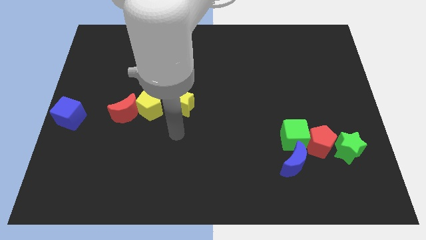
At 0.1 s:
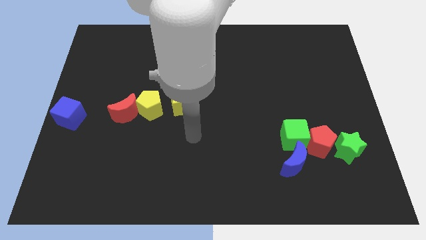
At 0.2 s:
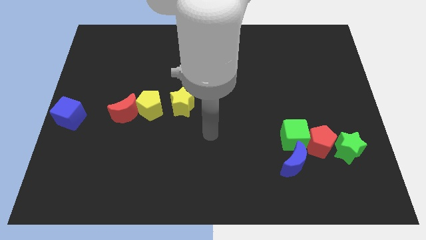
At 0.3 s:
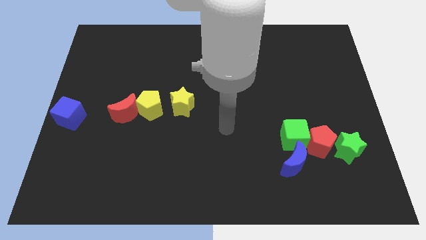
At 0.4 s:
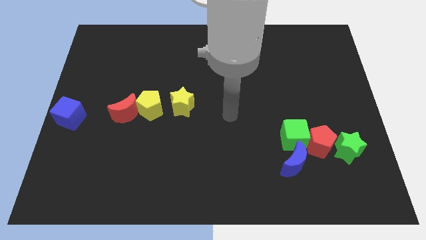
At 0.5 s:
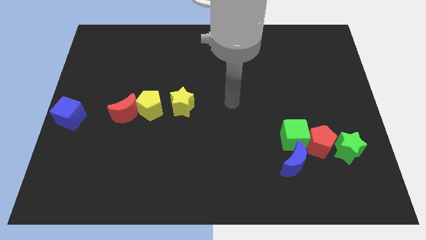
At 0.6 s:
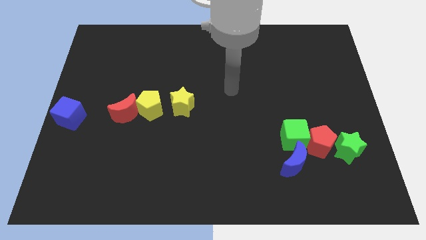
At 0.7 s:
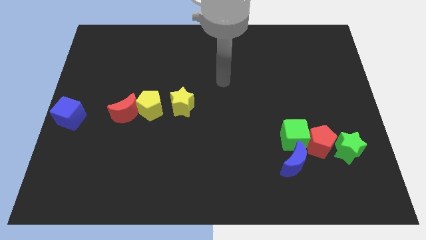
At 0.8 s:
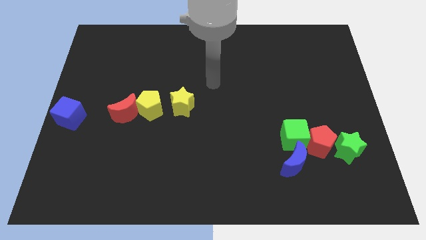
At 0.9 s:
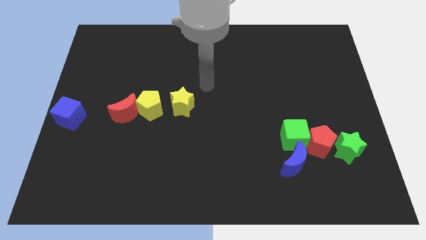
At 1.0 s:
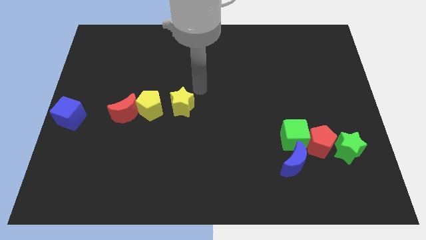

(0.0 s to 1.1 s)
point your arm at the top right side of the yellow star

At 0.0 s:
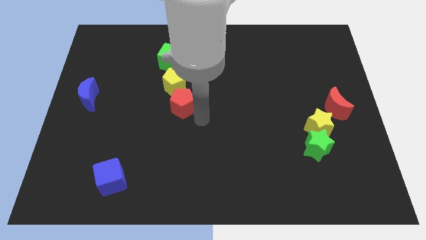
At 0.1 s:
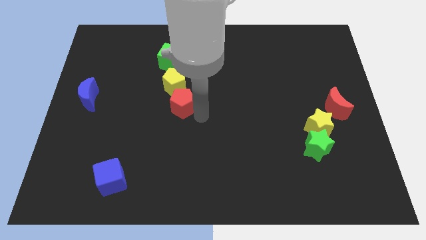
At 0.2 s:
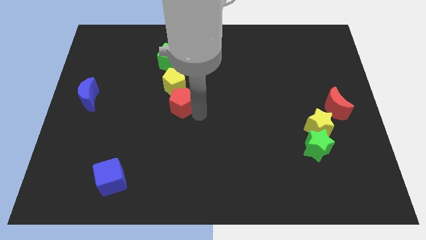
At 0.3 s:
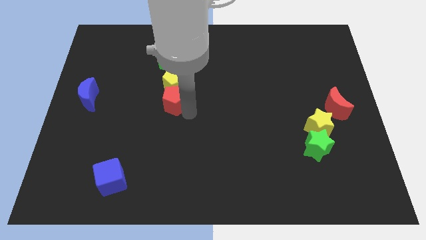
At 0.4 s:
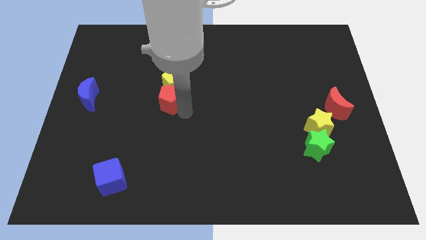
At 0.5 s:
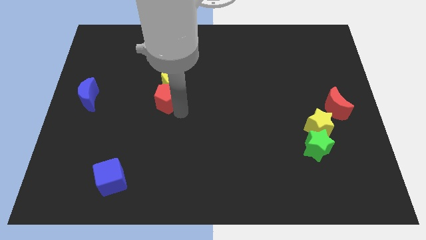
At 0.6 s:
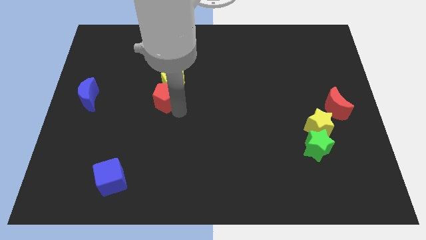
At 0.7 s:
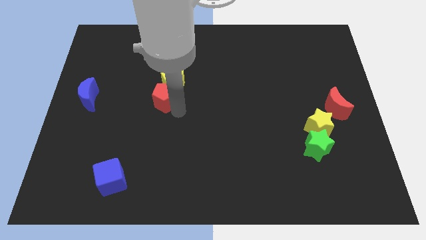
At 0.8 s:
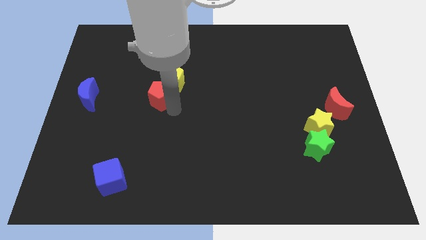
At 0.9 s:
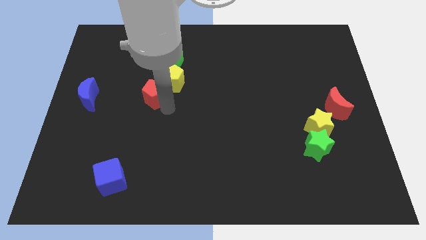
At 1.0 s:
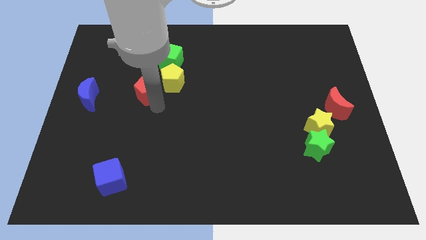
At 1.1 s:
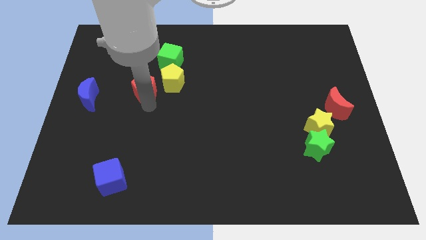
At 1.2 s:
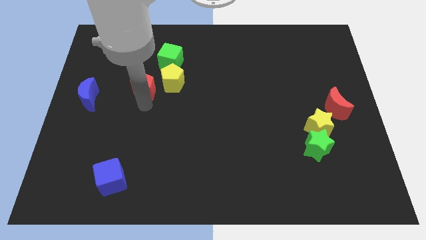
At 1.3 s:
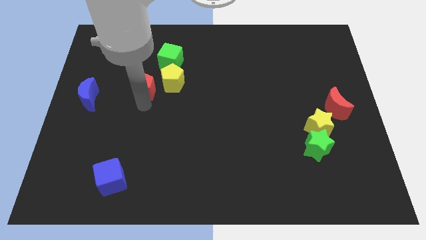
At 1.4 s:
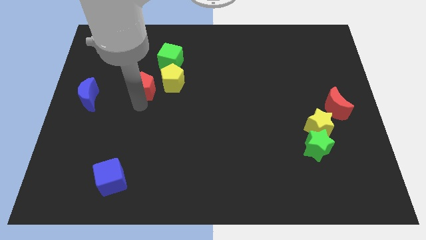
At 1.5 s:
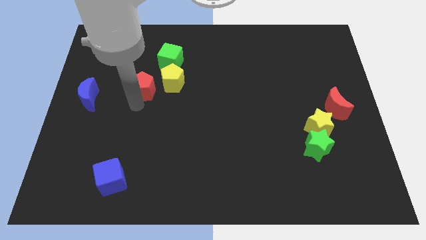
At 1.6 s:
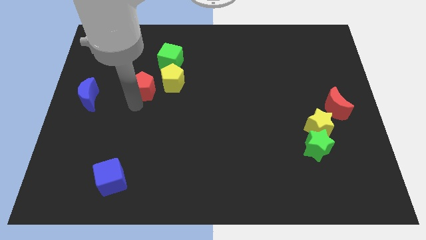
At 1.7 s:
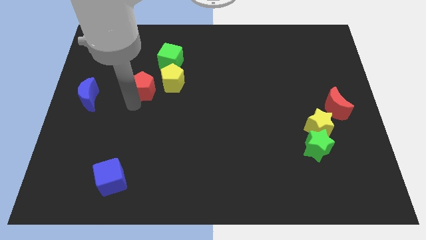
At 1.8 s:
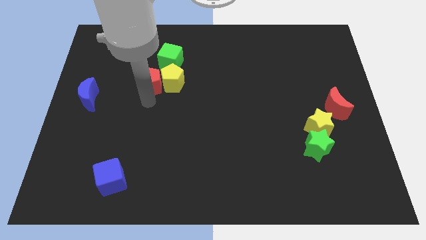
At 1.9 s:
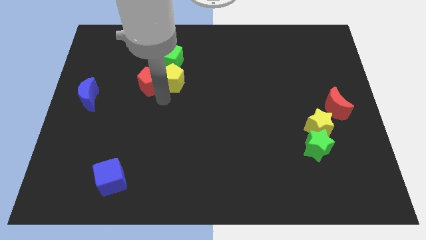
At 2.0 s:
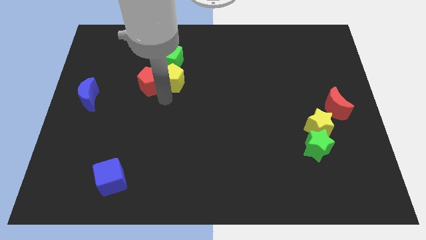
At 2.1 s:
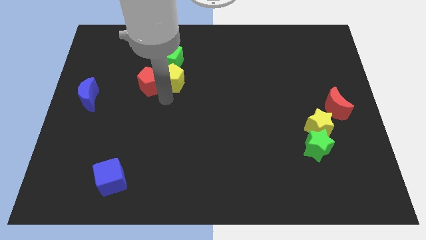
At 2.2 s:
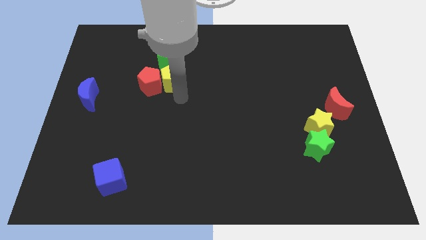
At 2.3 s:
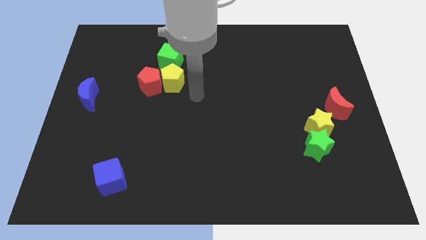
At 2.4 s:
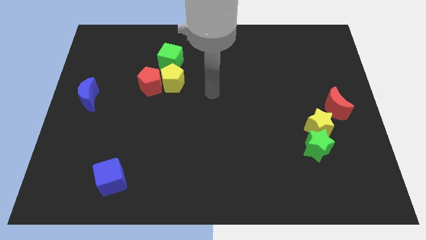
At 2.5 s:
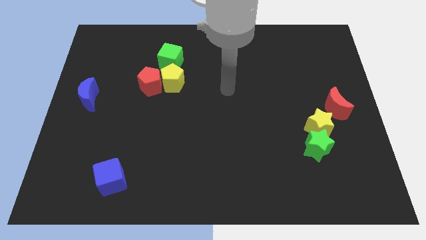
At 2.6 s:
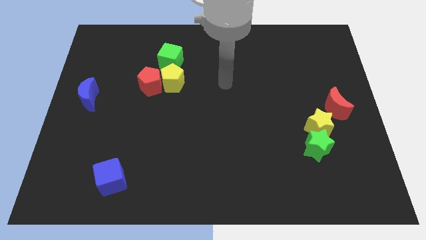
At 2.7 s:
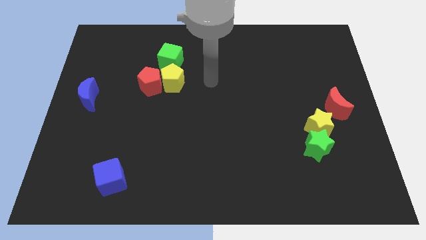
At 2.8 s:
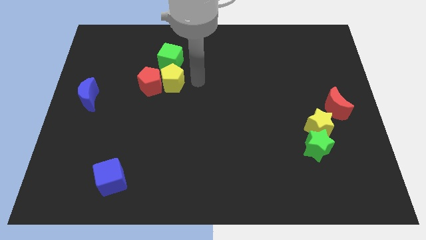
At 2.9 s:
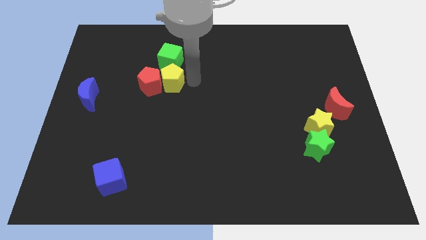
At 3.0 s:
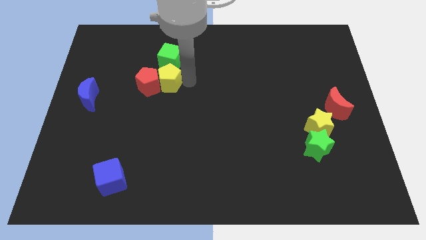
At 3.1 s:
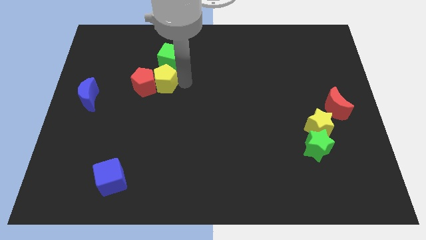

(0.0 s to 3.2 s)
place the red pentagon and yellow pentagon close to each other

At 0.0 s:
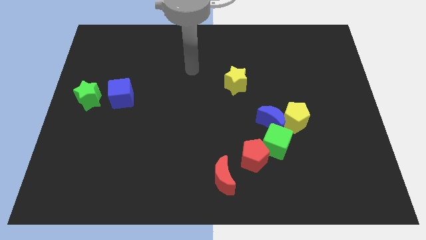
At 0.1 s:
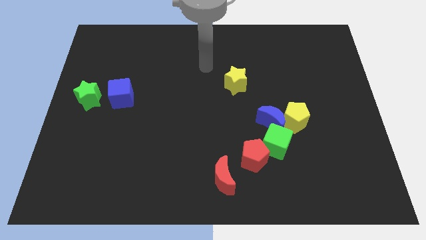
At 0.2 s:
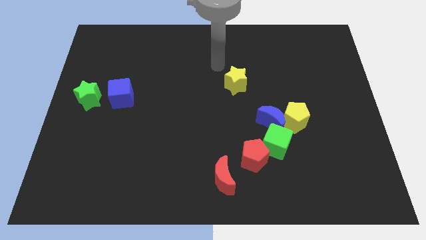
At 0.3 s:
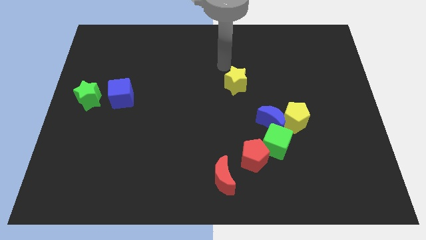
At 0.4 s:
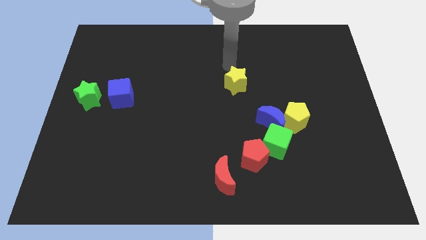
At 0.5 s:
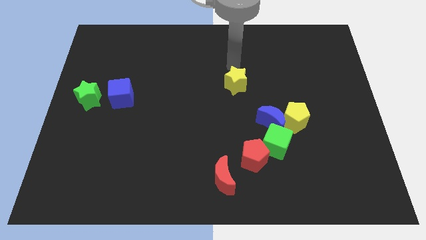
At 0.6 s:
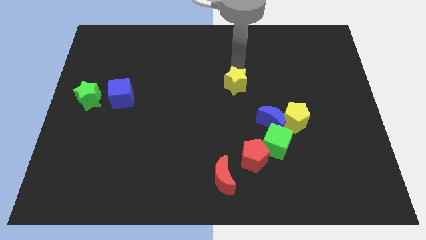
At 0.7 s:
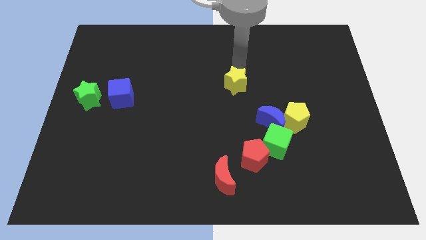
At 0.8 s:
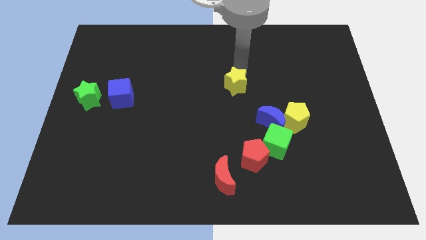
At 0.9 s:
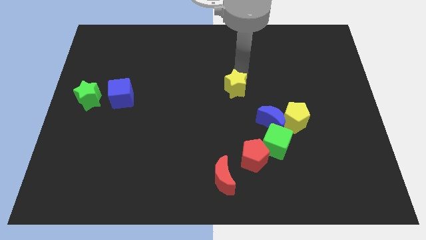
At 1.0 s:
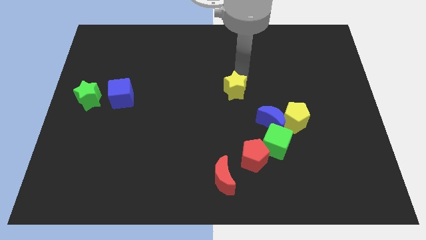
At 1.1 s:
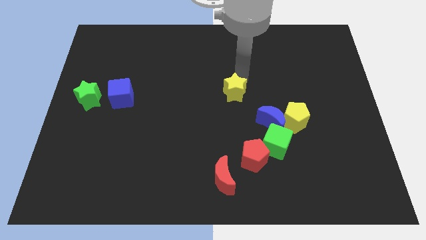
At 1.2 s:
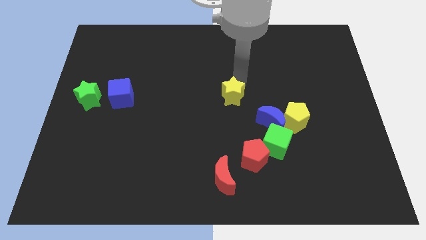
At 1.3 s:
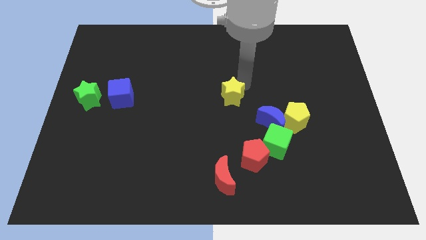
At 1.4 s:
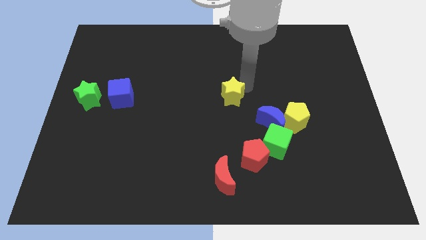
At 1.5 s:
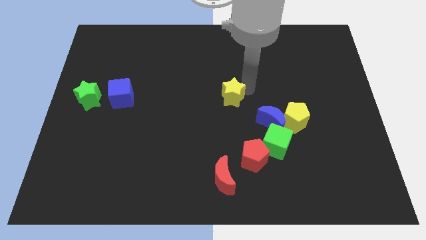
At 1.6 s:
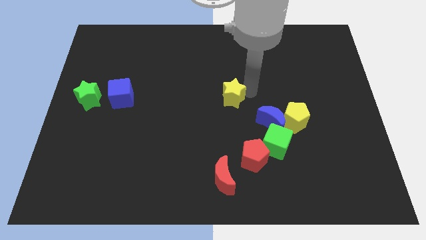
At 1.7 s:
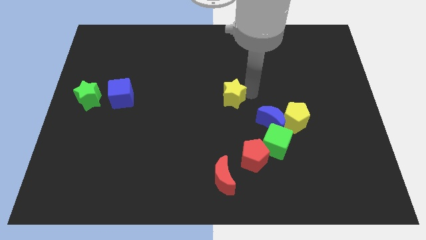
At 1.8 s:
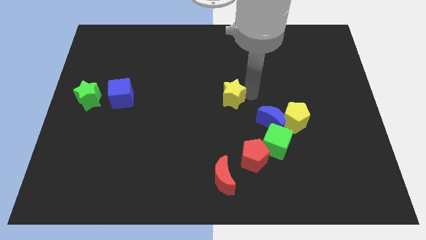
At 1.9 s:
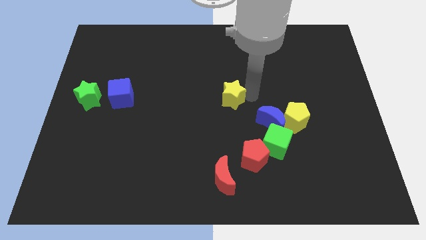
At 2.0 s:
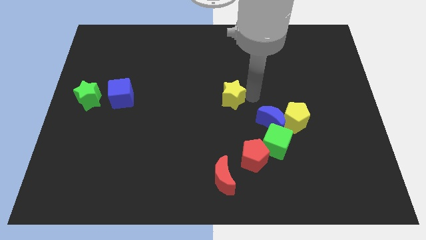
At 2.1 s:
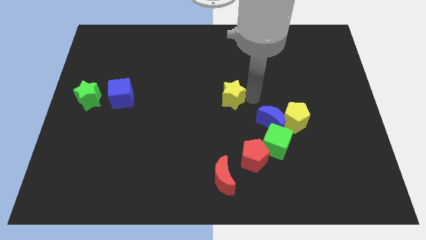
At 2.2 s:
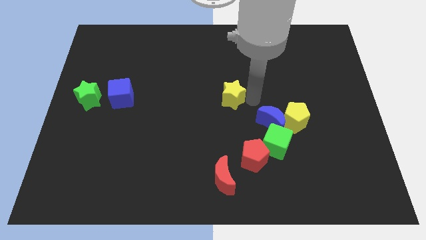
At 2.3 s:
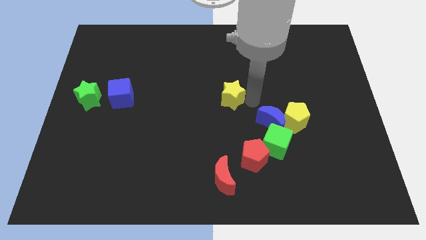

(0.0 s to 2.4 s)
push the yellow star slightly downwards

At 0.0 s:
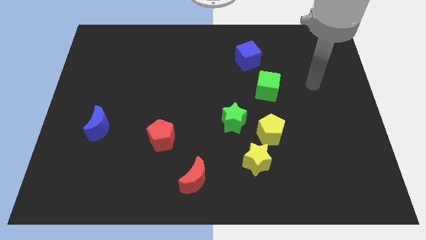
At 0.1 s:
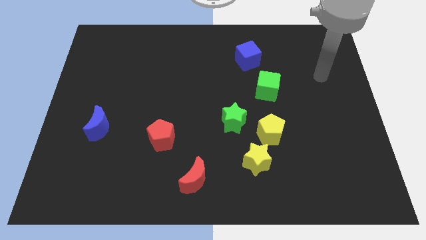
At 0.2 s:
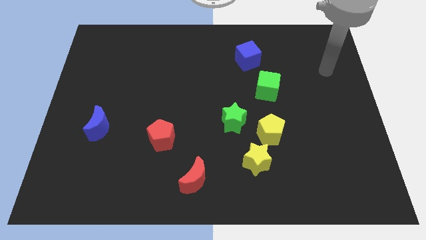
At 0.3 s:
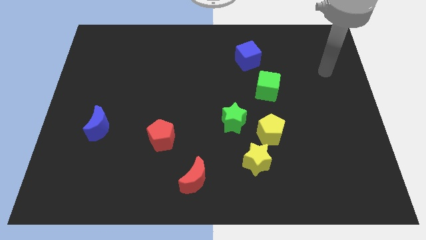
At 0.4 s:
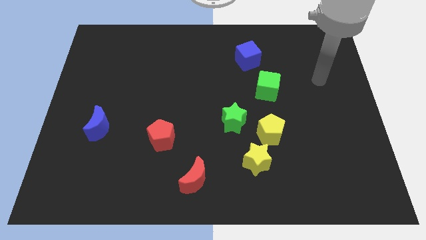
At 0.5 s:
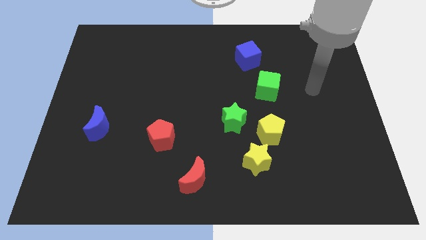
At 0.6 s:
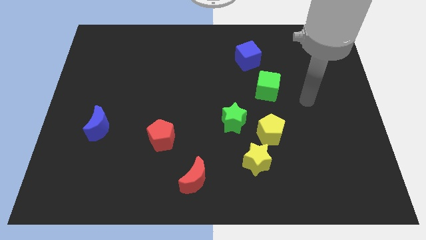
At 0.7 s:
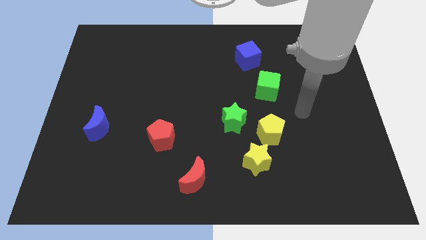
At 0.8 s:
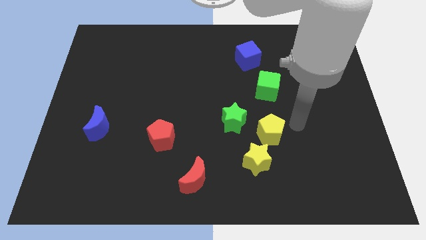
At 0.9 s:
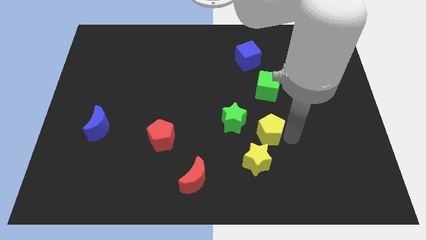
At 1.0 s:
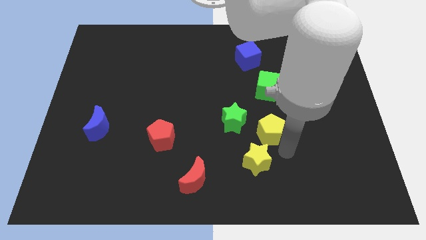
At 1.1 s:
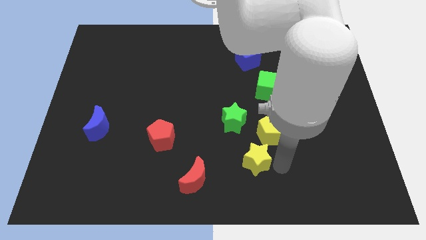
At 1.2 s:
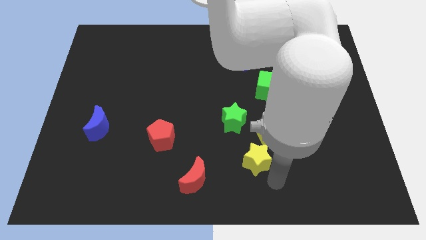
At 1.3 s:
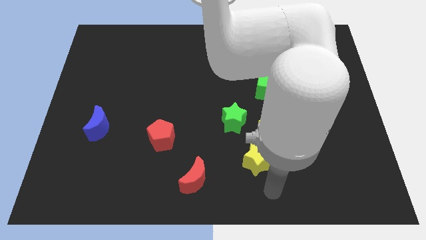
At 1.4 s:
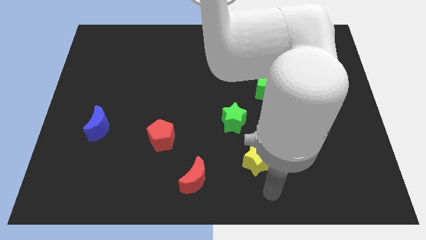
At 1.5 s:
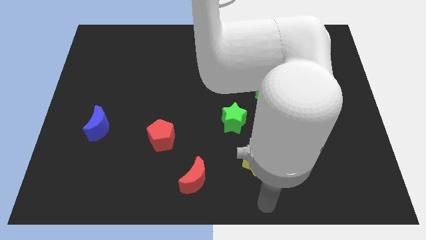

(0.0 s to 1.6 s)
move your arm below the yellow star

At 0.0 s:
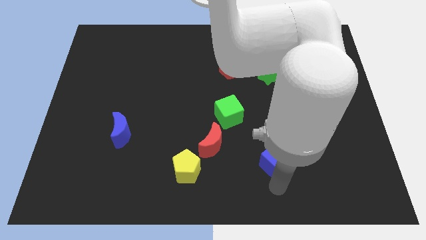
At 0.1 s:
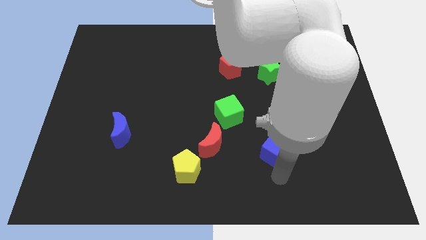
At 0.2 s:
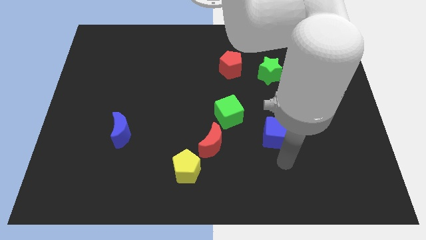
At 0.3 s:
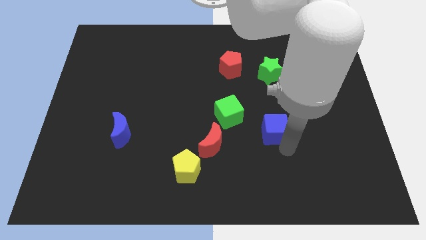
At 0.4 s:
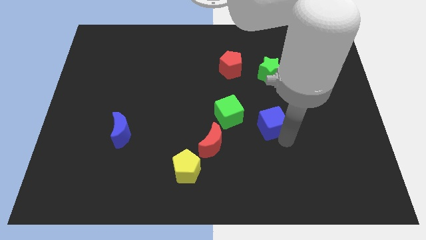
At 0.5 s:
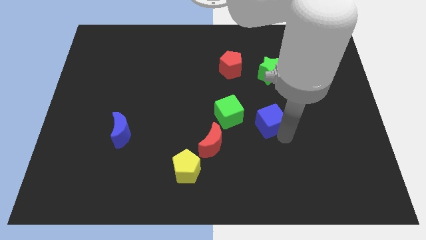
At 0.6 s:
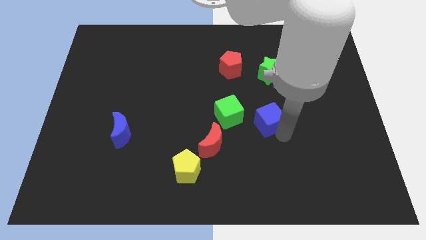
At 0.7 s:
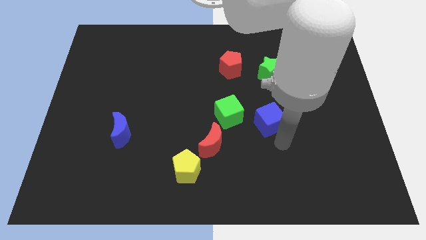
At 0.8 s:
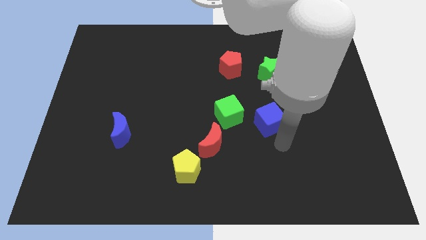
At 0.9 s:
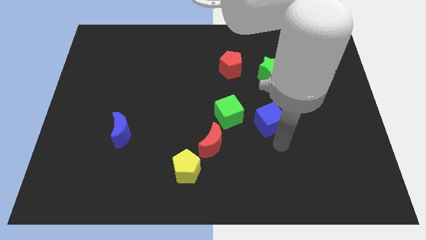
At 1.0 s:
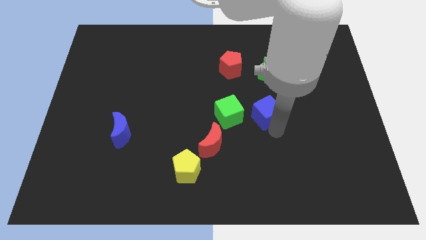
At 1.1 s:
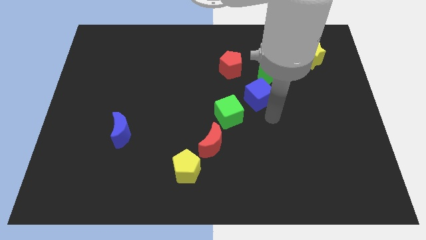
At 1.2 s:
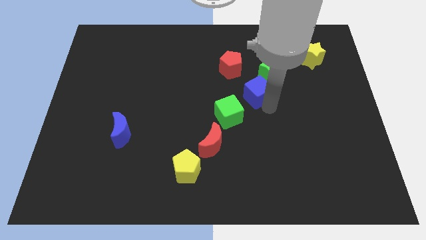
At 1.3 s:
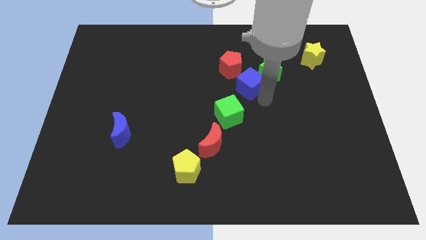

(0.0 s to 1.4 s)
move the blue cube diagonally in between the green cube and green star
